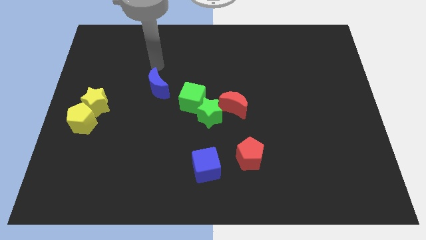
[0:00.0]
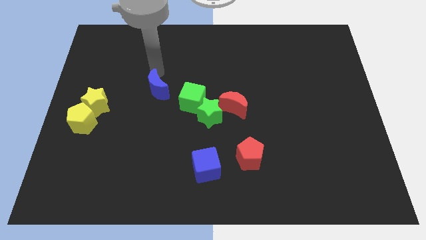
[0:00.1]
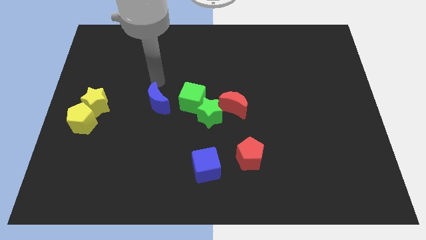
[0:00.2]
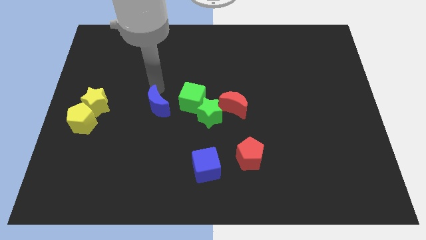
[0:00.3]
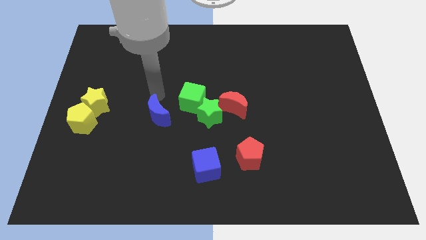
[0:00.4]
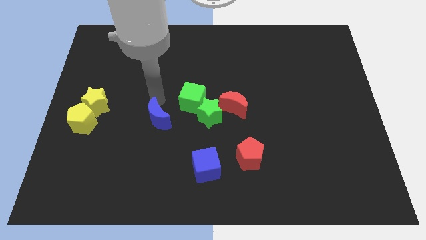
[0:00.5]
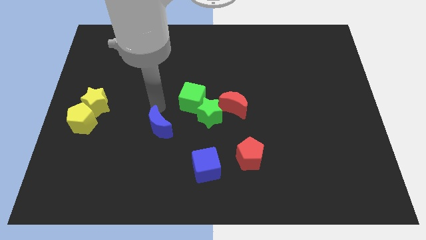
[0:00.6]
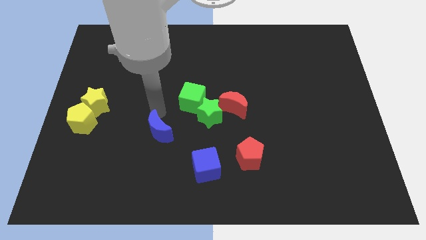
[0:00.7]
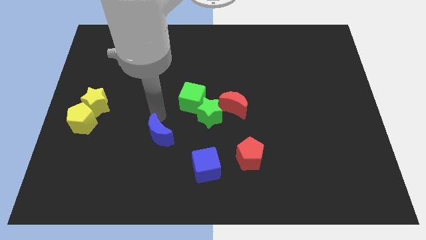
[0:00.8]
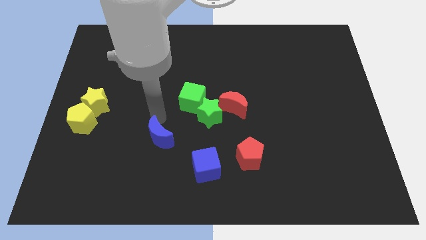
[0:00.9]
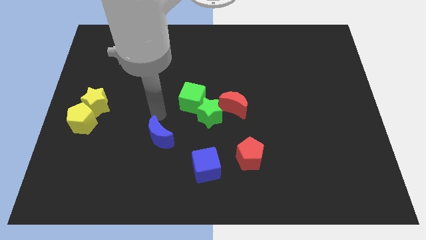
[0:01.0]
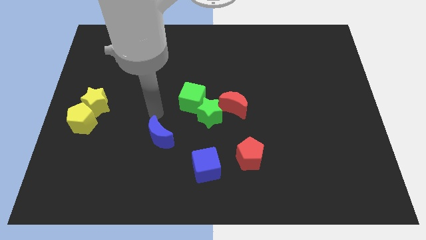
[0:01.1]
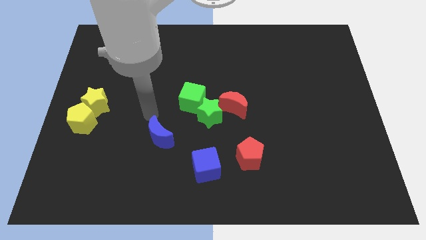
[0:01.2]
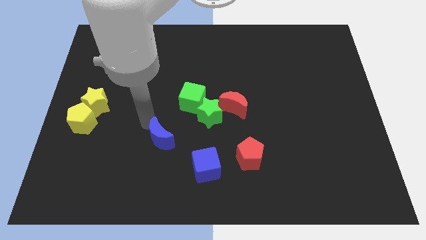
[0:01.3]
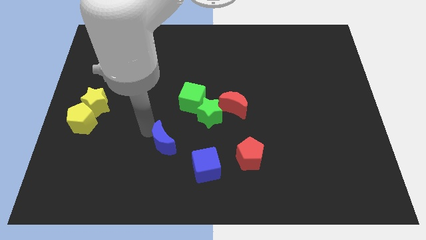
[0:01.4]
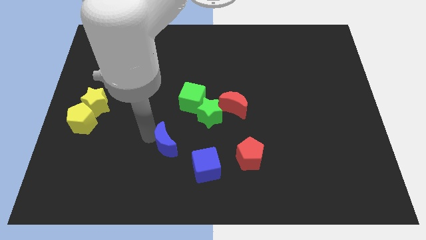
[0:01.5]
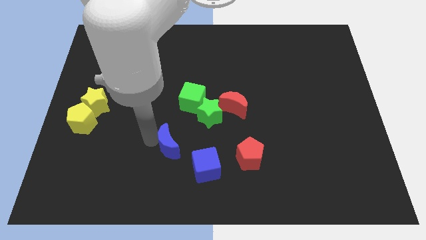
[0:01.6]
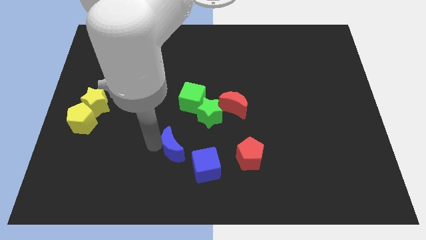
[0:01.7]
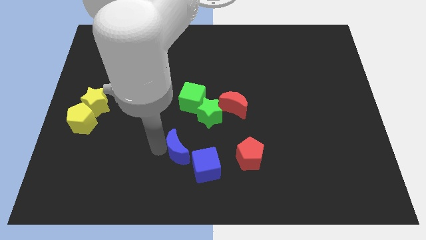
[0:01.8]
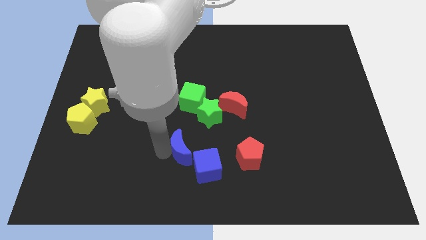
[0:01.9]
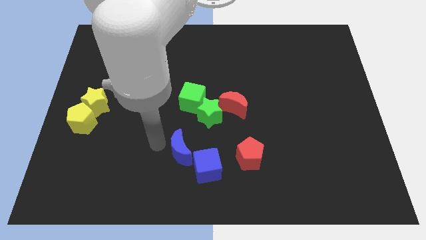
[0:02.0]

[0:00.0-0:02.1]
add blue moon into blue cube

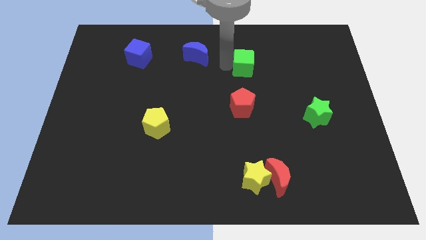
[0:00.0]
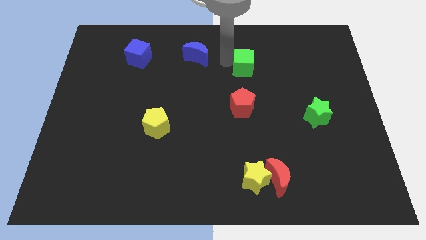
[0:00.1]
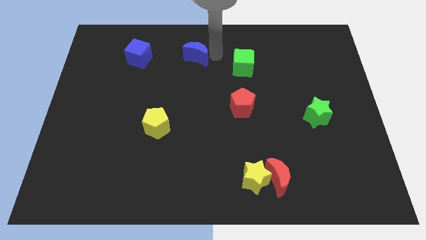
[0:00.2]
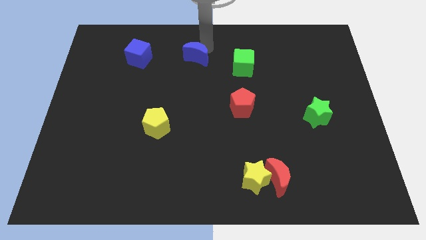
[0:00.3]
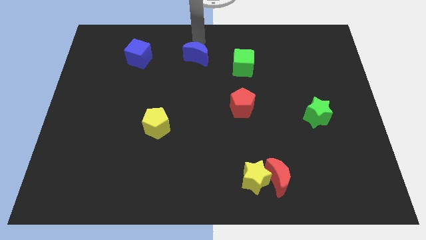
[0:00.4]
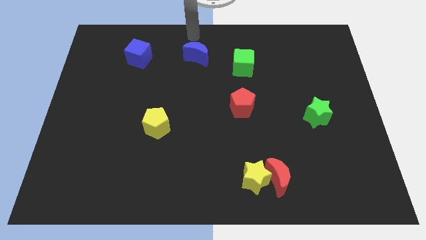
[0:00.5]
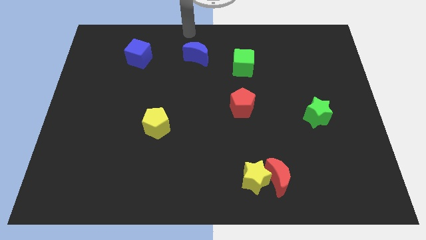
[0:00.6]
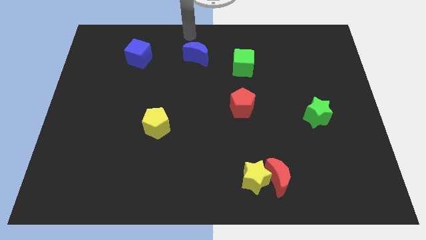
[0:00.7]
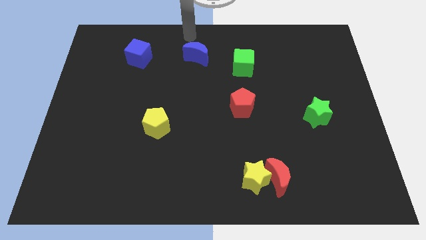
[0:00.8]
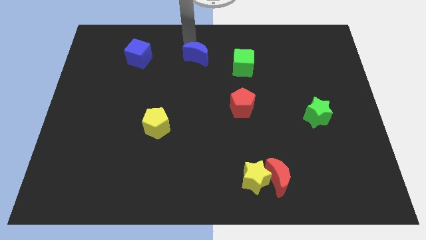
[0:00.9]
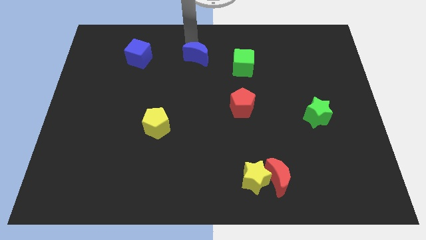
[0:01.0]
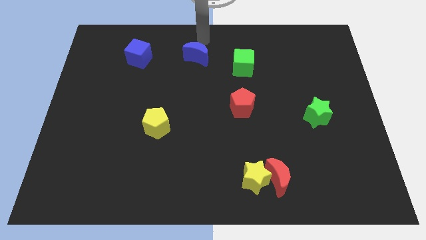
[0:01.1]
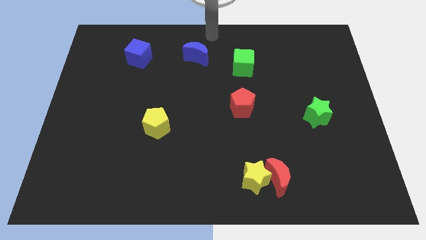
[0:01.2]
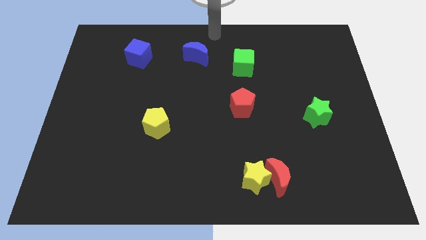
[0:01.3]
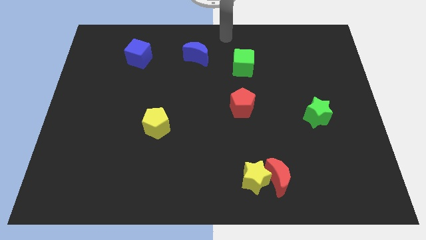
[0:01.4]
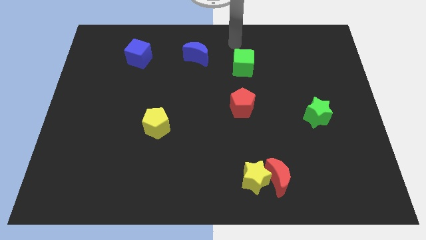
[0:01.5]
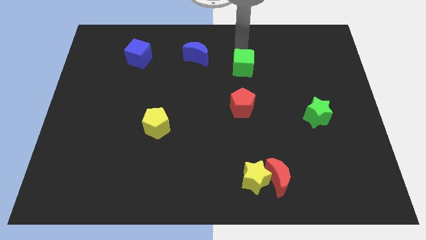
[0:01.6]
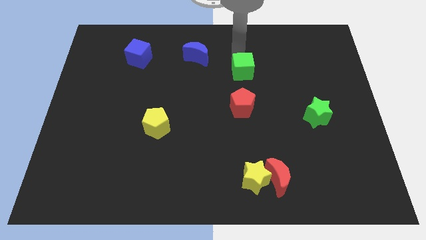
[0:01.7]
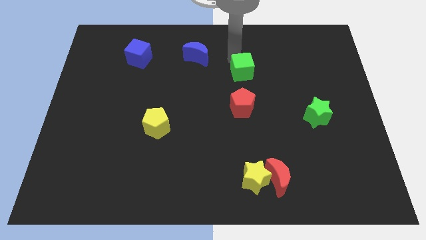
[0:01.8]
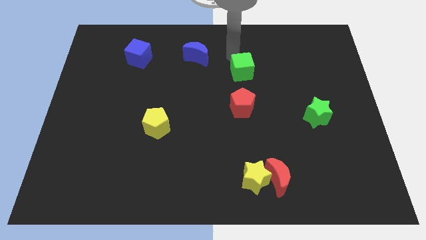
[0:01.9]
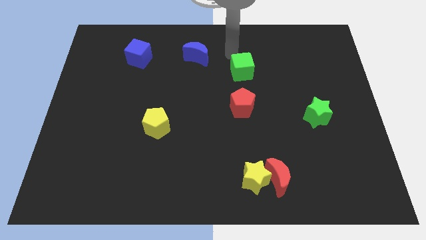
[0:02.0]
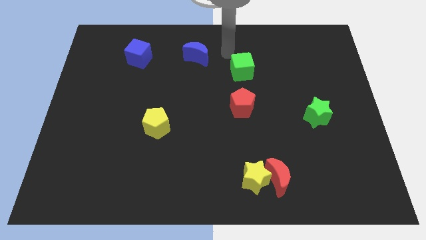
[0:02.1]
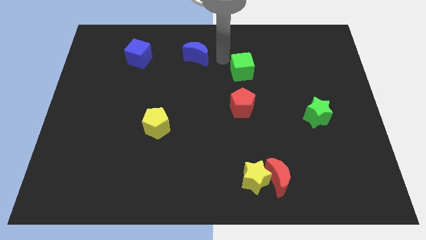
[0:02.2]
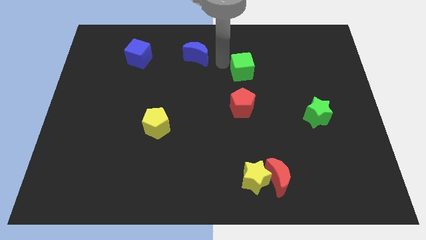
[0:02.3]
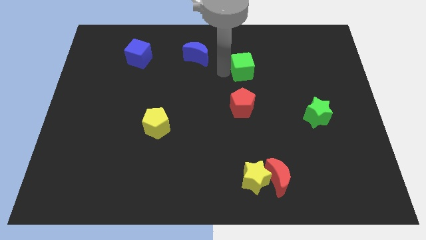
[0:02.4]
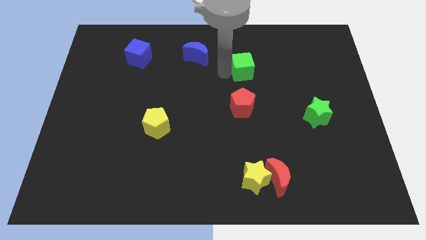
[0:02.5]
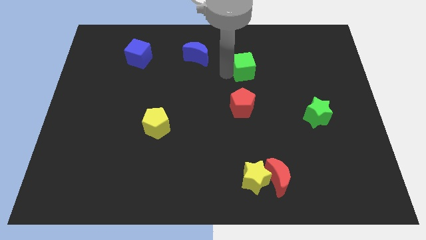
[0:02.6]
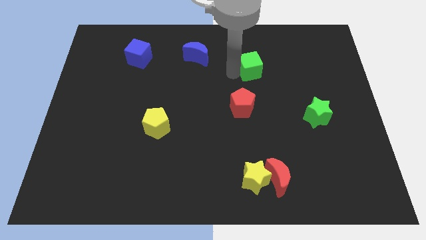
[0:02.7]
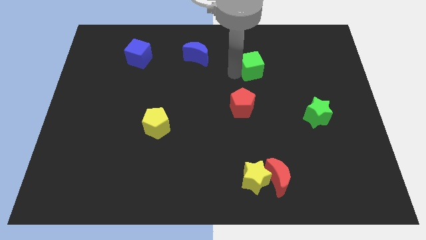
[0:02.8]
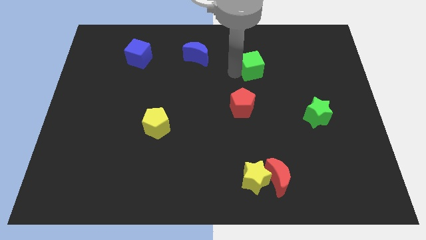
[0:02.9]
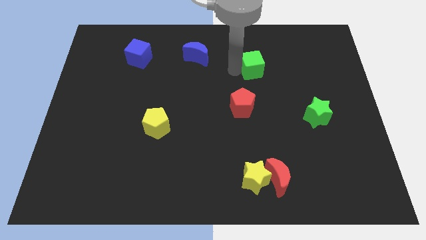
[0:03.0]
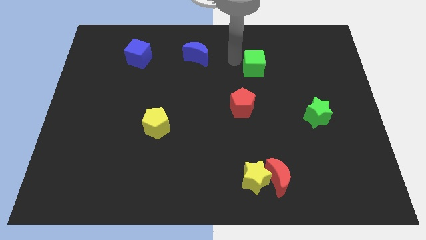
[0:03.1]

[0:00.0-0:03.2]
move the green cube to the top side of the red pentagon

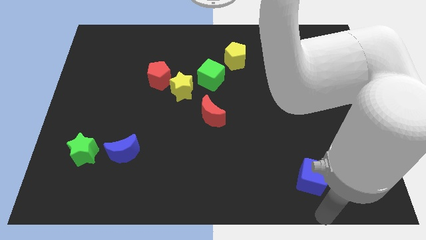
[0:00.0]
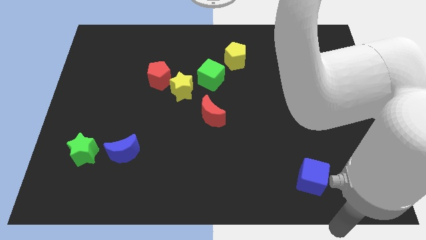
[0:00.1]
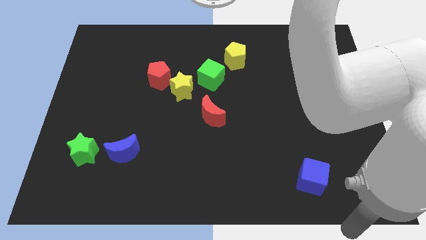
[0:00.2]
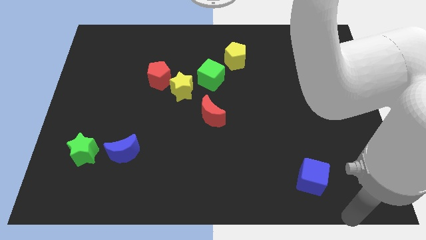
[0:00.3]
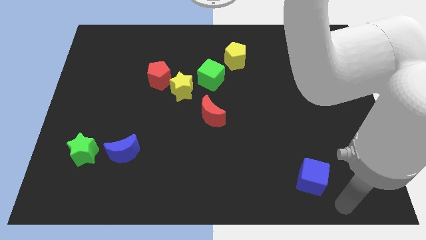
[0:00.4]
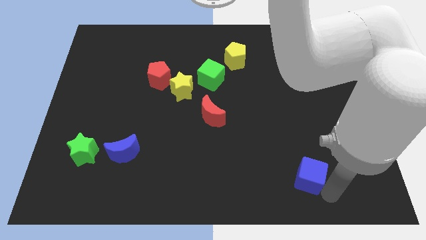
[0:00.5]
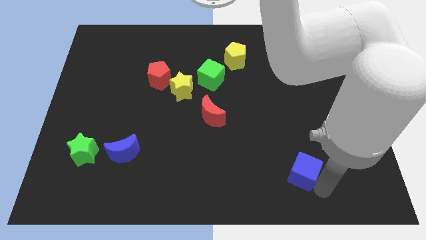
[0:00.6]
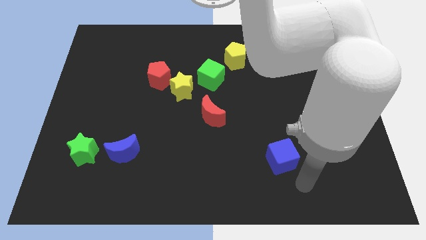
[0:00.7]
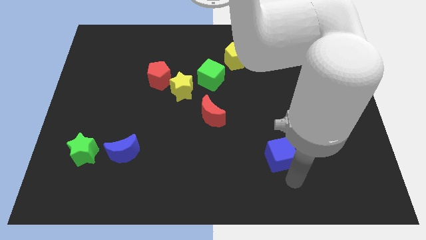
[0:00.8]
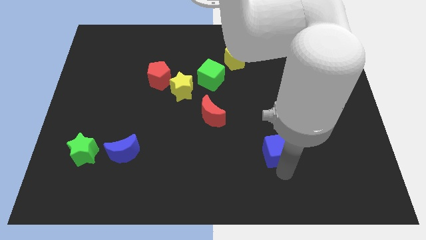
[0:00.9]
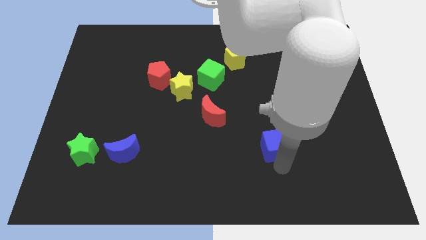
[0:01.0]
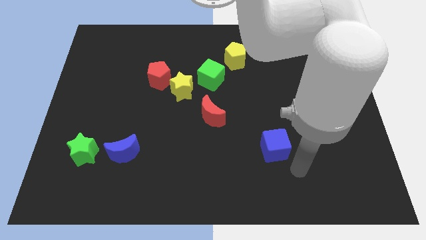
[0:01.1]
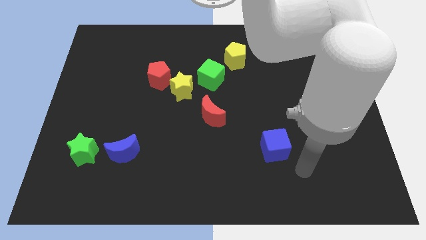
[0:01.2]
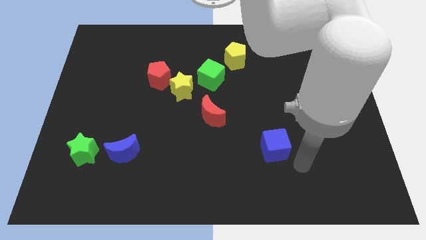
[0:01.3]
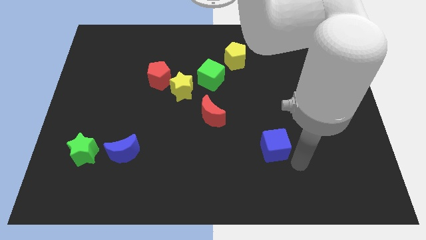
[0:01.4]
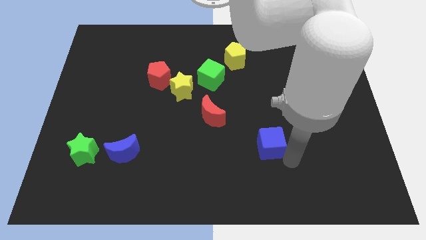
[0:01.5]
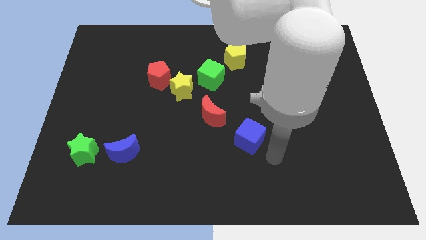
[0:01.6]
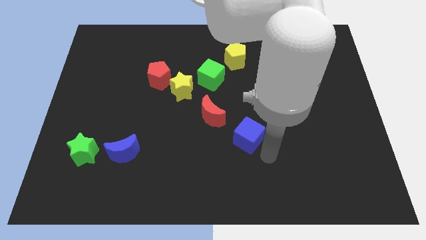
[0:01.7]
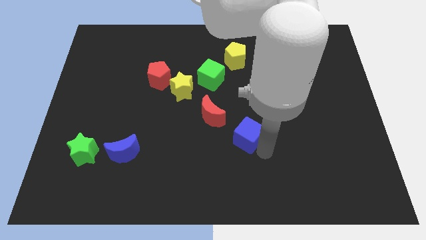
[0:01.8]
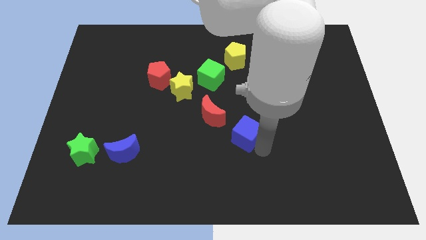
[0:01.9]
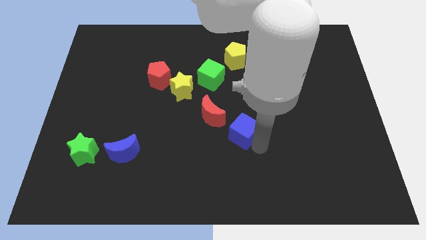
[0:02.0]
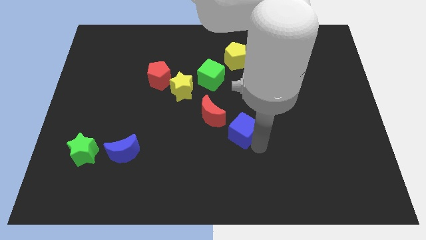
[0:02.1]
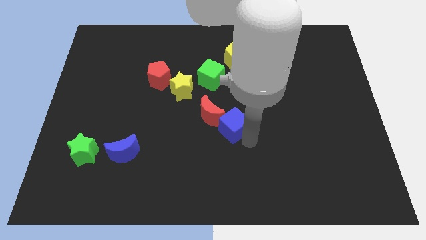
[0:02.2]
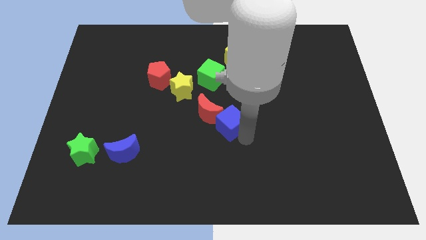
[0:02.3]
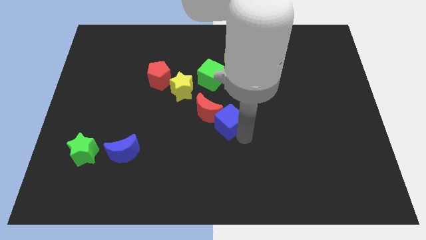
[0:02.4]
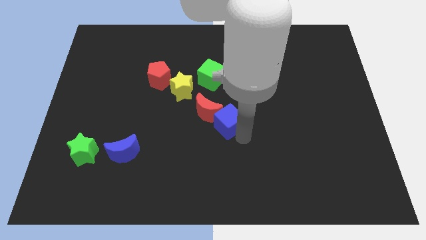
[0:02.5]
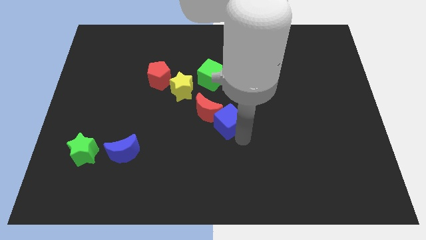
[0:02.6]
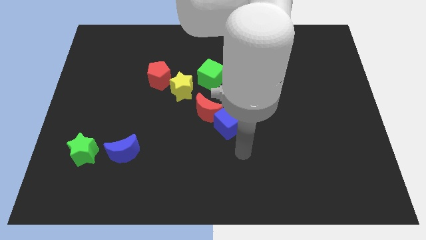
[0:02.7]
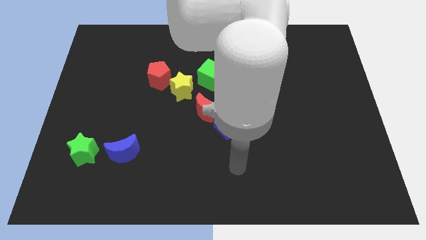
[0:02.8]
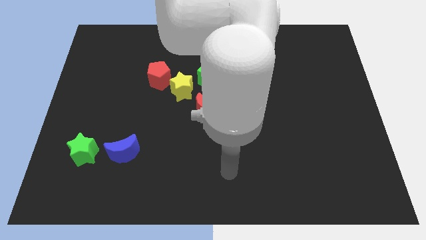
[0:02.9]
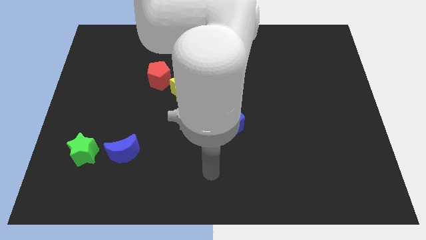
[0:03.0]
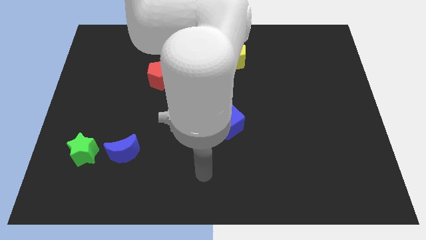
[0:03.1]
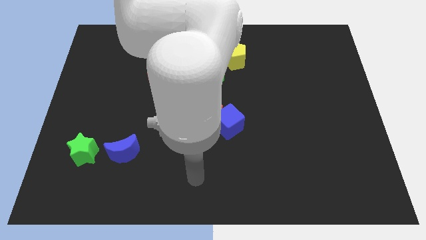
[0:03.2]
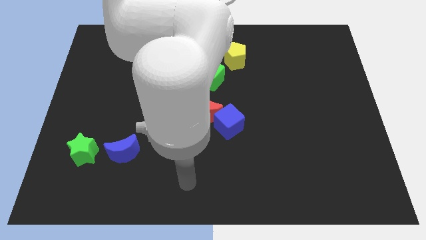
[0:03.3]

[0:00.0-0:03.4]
slide the blue cube into the bottom right of the red moon

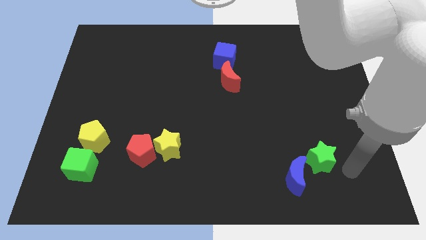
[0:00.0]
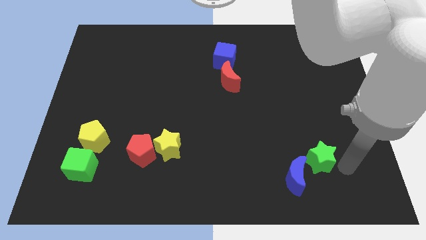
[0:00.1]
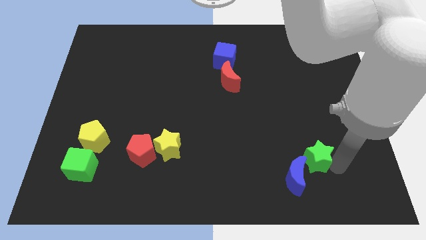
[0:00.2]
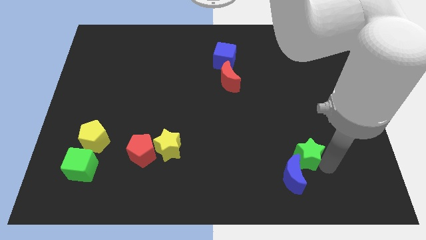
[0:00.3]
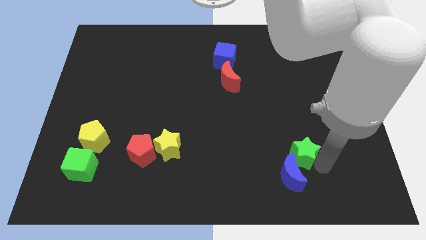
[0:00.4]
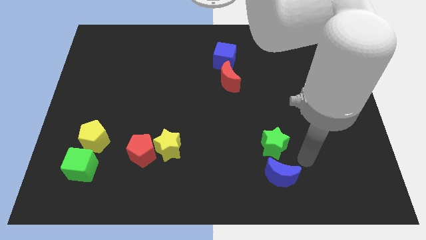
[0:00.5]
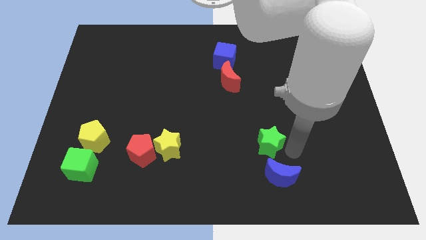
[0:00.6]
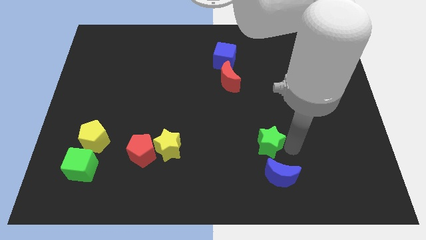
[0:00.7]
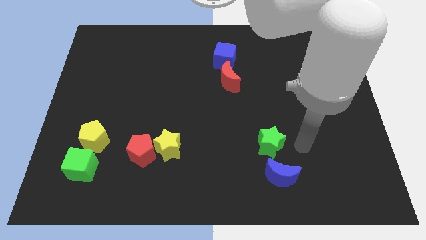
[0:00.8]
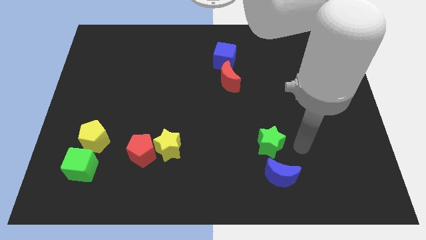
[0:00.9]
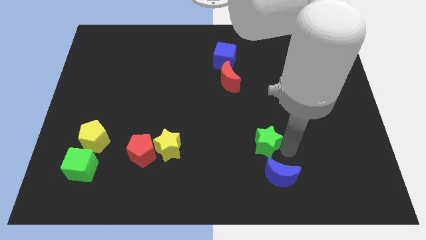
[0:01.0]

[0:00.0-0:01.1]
place the green star on the top left side of the blue crescent
